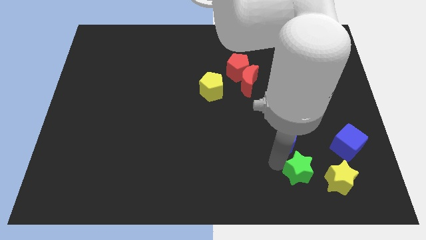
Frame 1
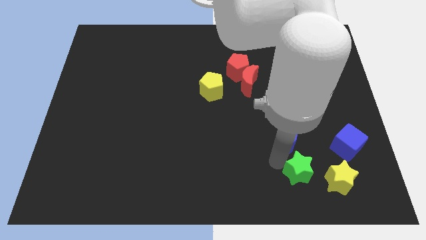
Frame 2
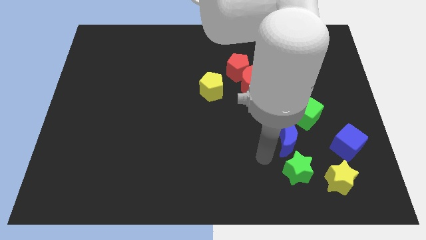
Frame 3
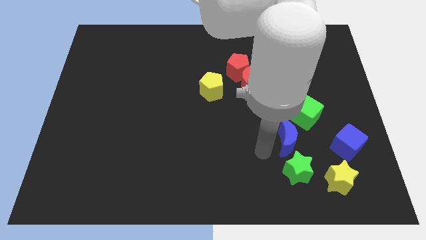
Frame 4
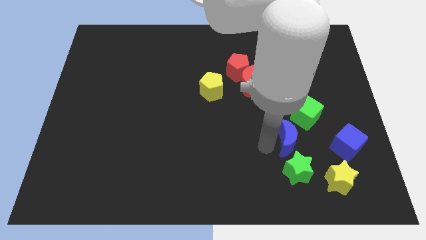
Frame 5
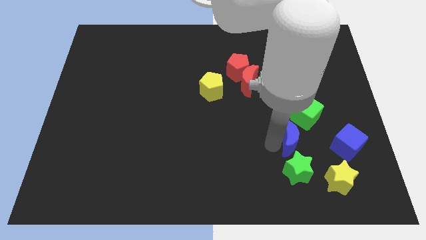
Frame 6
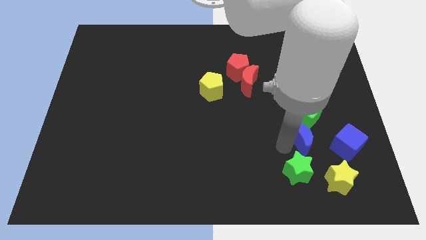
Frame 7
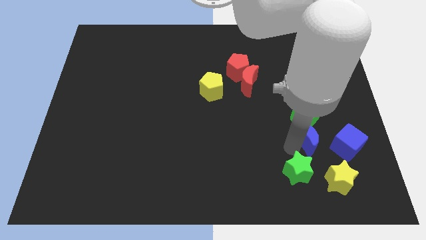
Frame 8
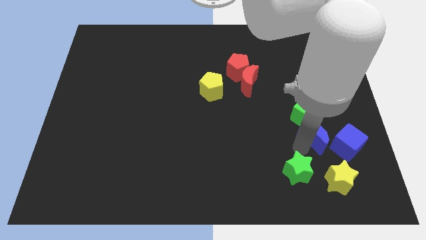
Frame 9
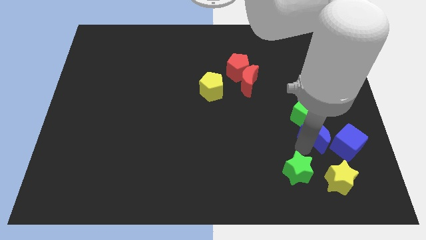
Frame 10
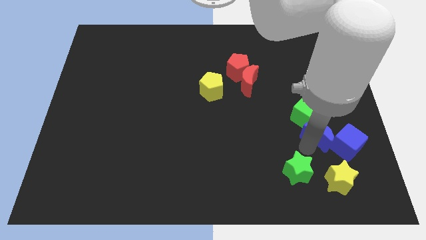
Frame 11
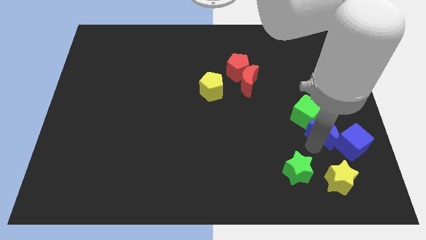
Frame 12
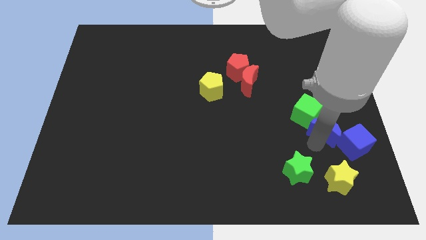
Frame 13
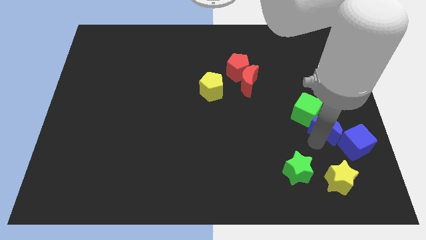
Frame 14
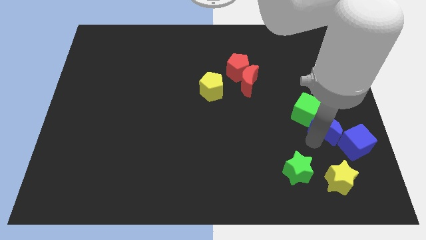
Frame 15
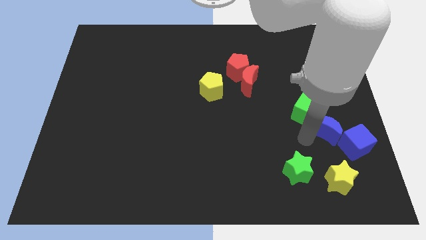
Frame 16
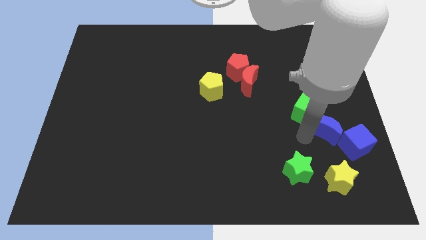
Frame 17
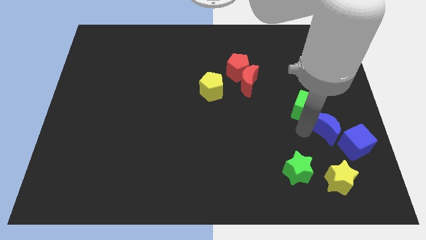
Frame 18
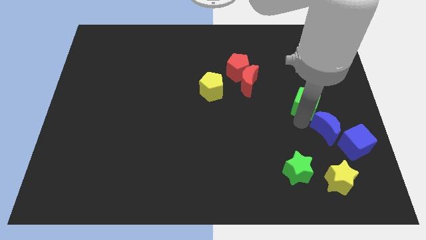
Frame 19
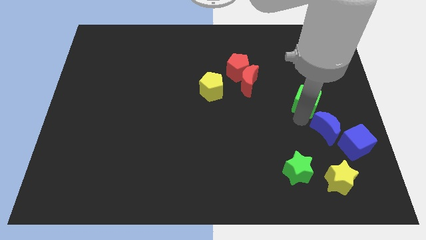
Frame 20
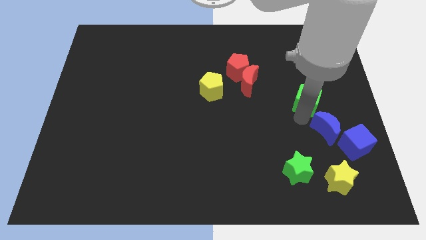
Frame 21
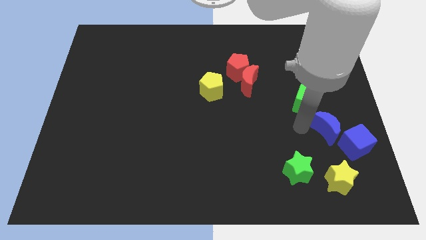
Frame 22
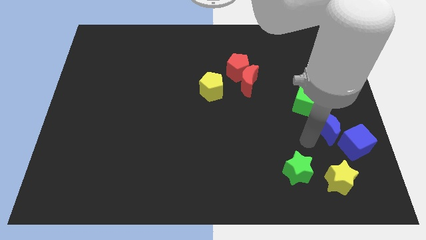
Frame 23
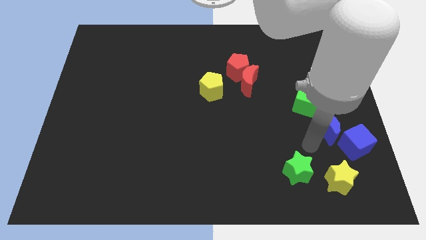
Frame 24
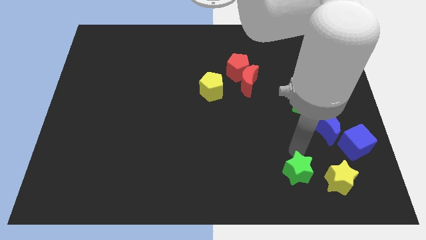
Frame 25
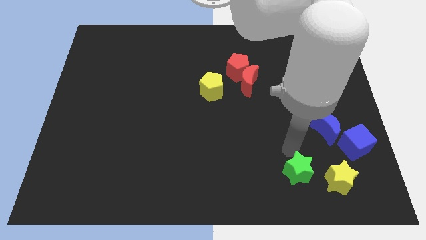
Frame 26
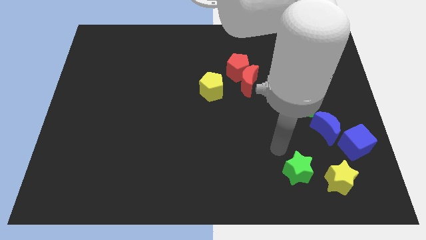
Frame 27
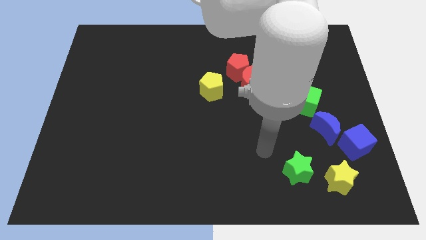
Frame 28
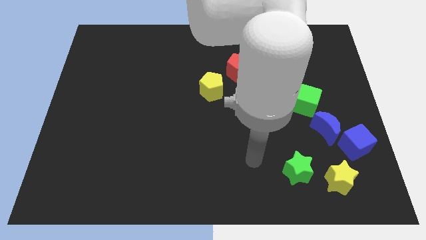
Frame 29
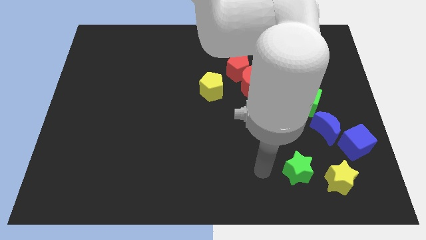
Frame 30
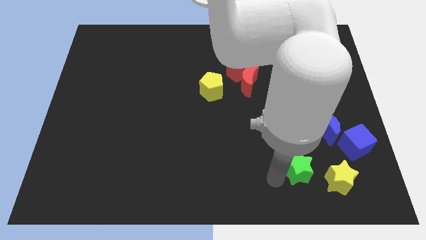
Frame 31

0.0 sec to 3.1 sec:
place blue moon between blue cube and green cube

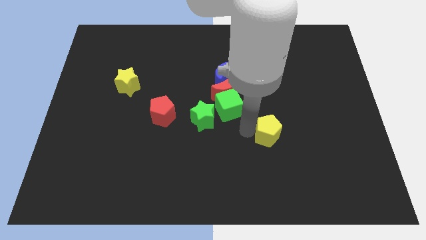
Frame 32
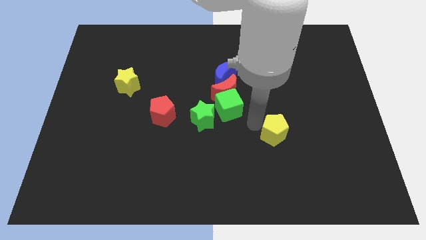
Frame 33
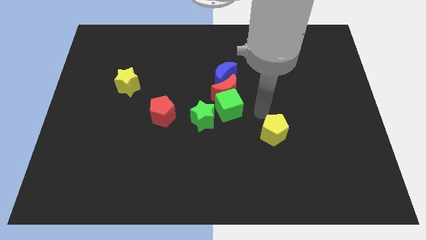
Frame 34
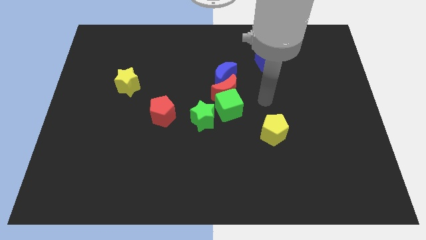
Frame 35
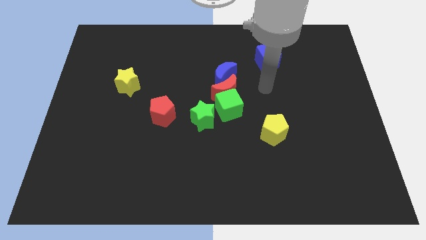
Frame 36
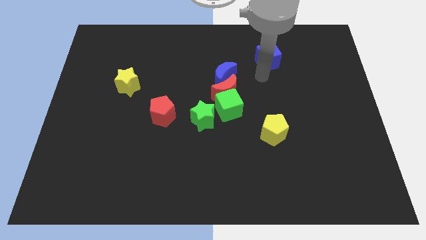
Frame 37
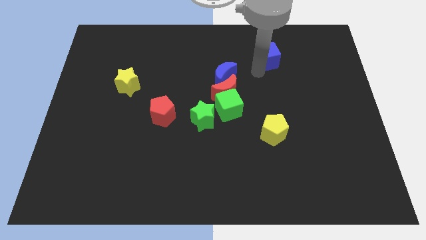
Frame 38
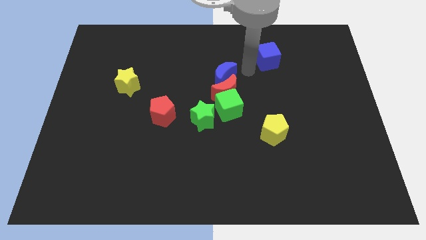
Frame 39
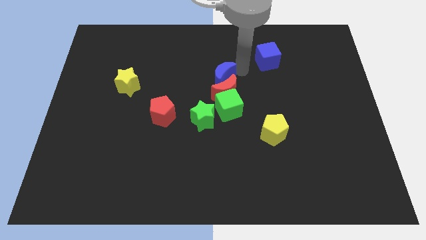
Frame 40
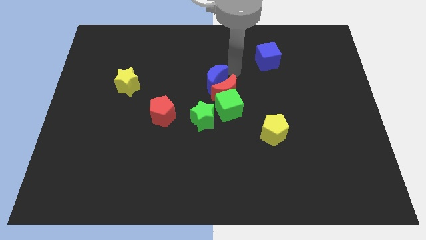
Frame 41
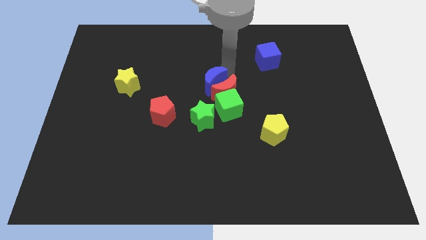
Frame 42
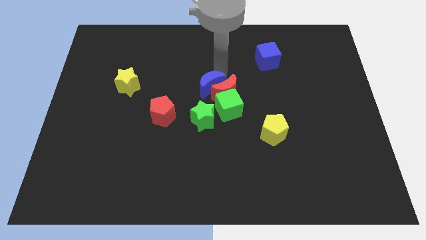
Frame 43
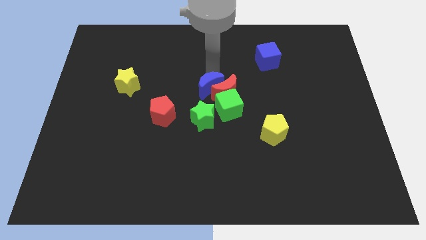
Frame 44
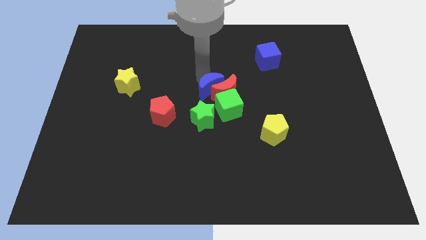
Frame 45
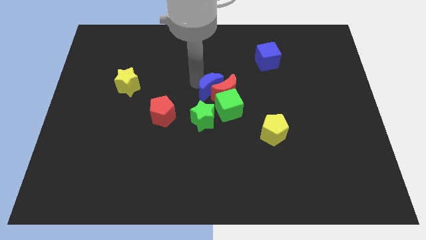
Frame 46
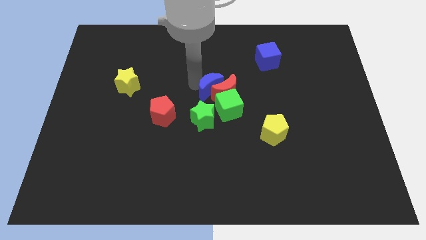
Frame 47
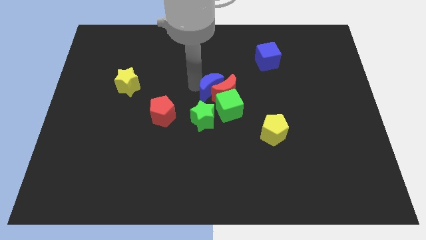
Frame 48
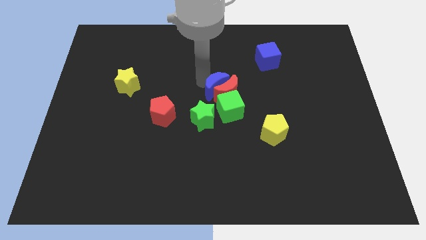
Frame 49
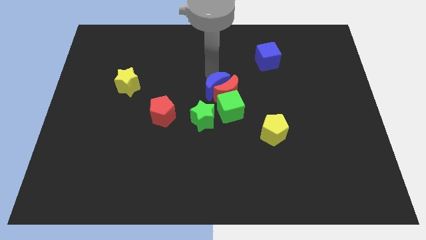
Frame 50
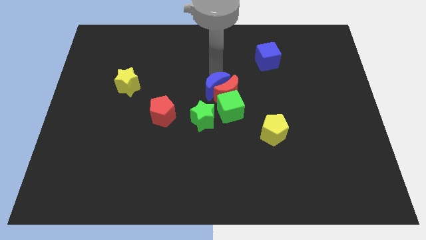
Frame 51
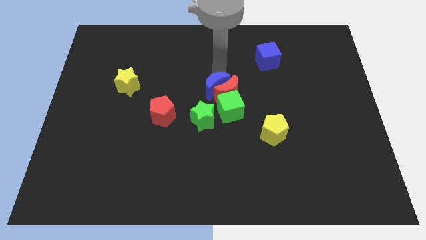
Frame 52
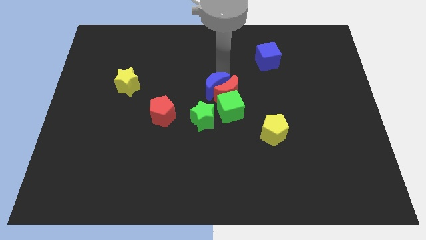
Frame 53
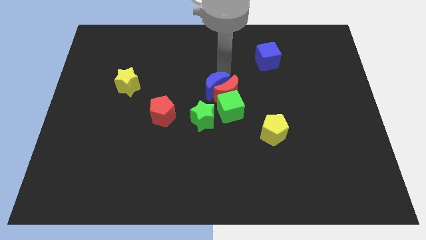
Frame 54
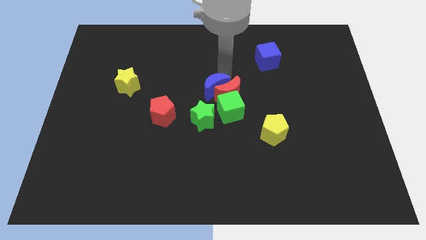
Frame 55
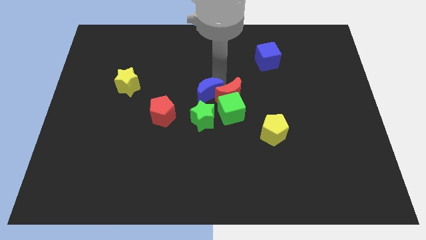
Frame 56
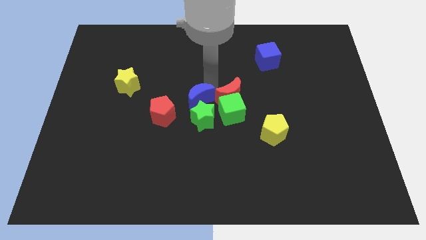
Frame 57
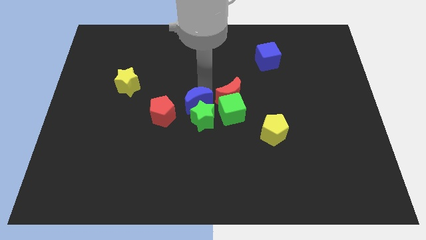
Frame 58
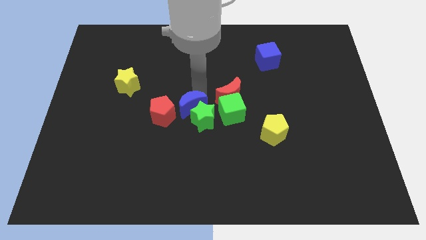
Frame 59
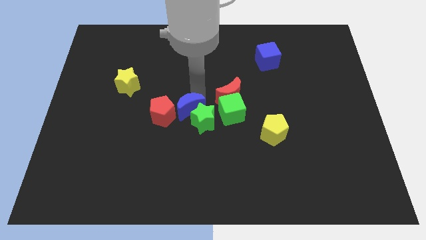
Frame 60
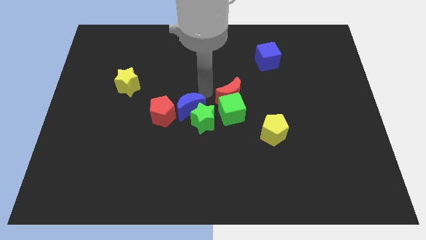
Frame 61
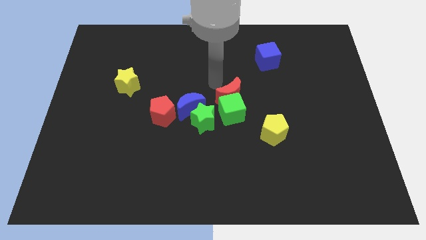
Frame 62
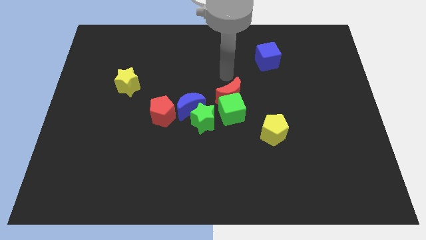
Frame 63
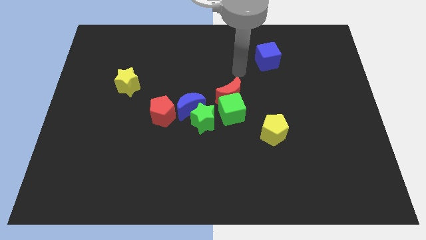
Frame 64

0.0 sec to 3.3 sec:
move blue crescent above green star

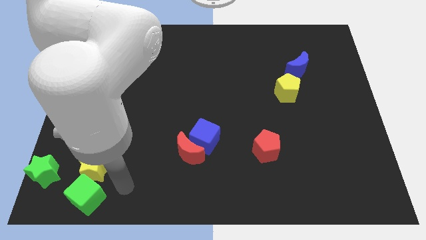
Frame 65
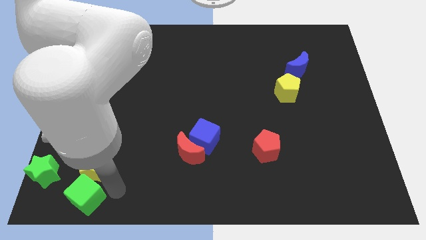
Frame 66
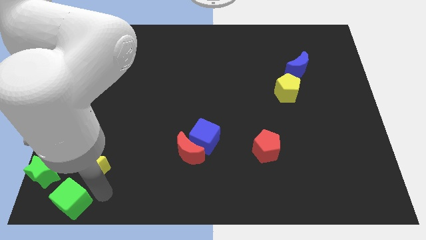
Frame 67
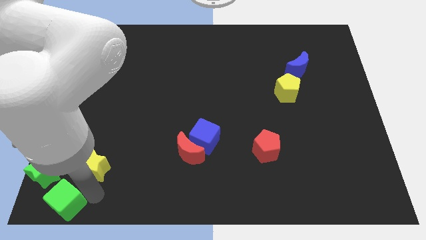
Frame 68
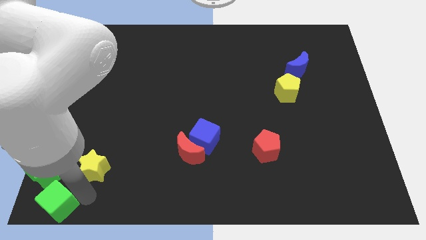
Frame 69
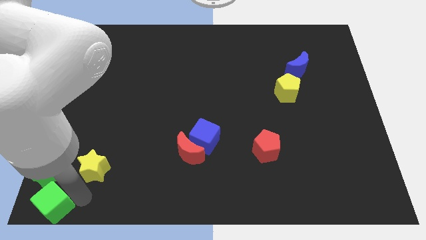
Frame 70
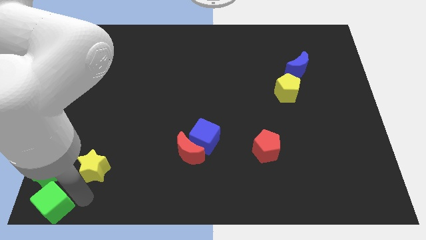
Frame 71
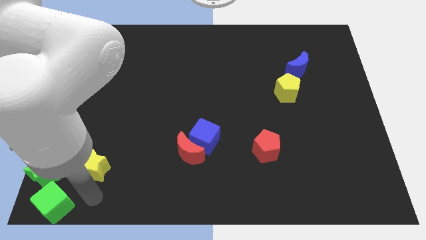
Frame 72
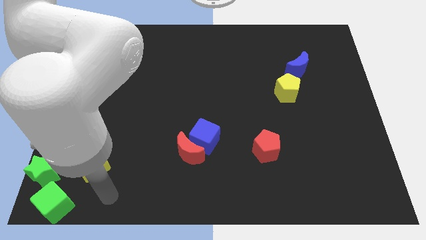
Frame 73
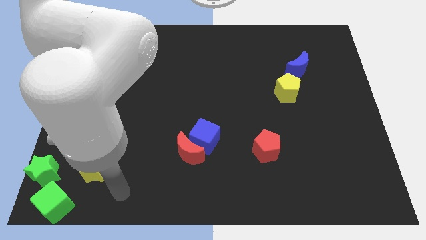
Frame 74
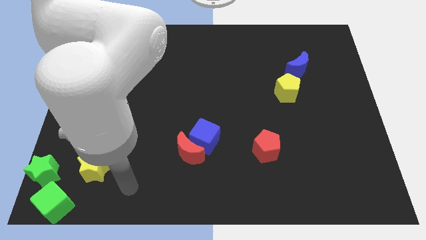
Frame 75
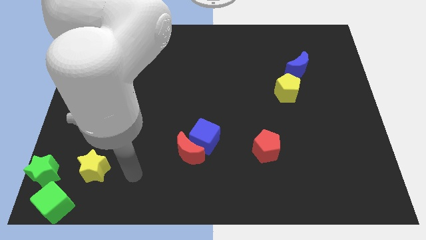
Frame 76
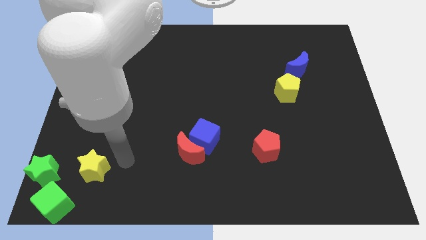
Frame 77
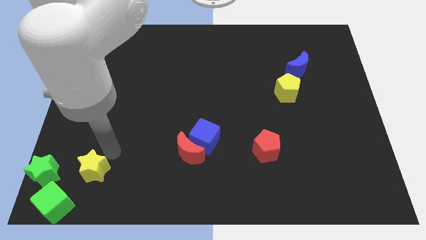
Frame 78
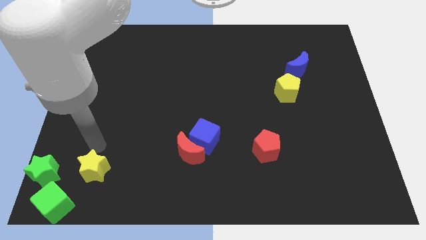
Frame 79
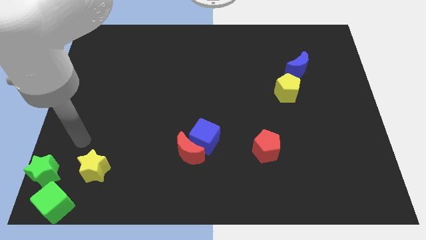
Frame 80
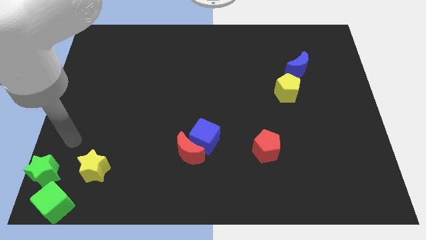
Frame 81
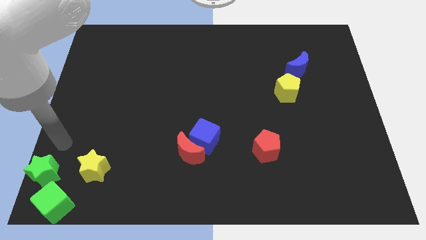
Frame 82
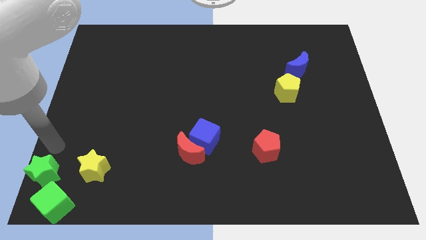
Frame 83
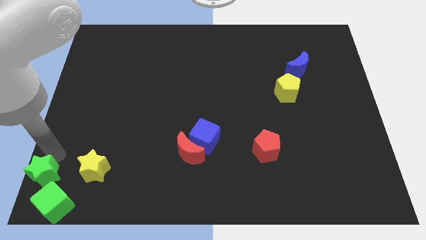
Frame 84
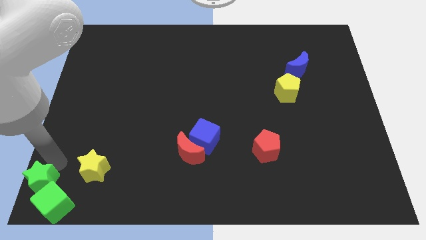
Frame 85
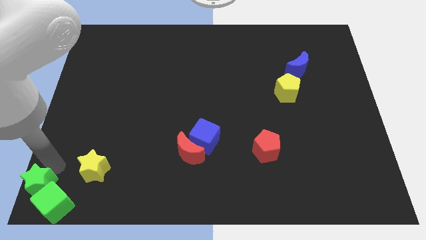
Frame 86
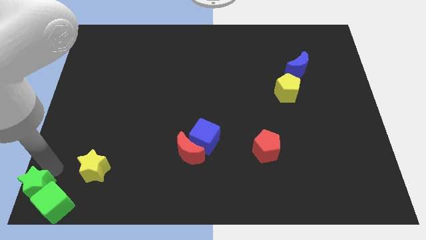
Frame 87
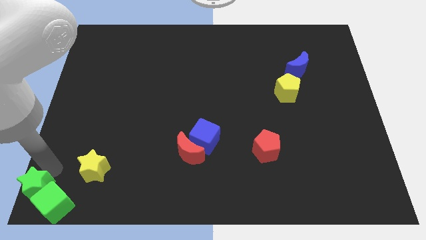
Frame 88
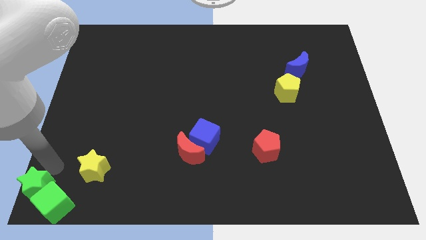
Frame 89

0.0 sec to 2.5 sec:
push the green cube and green star to the bottom left corner
